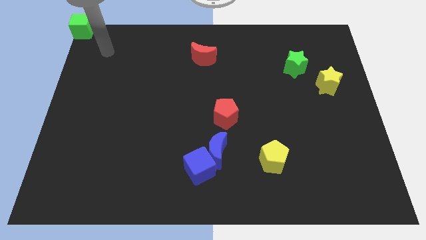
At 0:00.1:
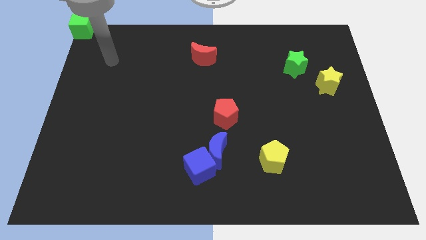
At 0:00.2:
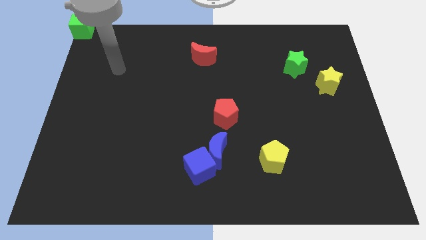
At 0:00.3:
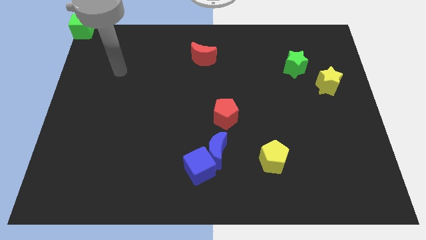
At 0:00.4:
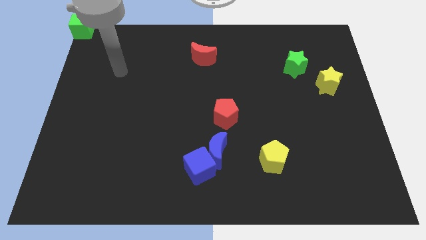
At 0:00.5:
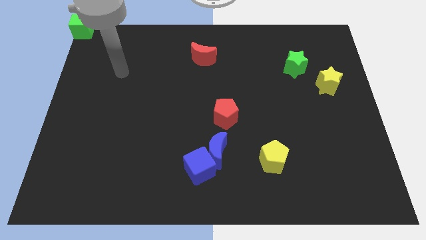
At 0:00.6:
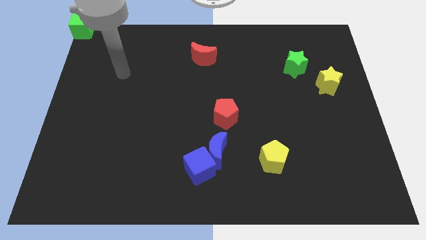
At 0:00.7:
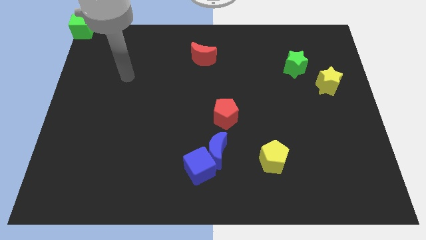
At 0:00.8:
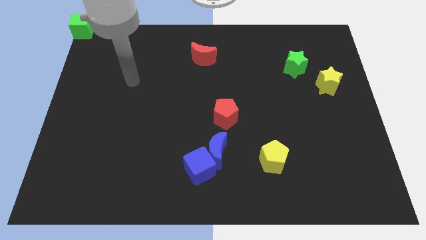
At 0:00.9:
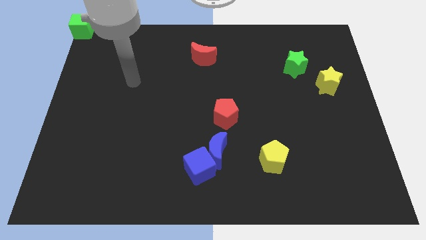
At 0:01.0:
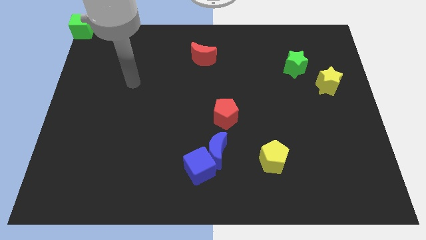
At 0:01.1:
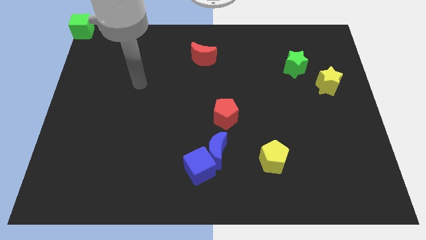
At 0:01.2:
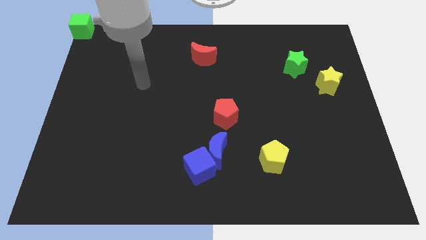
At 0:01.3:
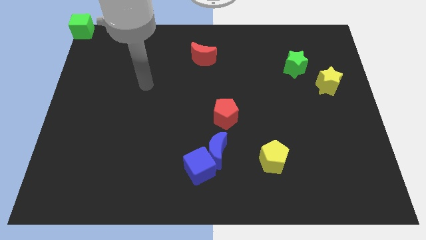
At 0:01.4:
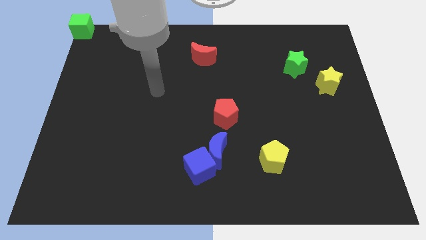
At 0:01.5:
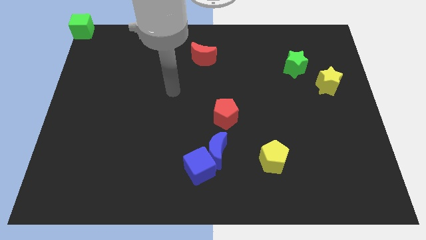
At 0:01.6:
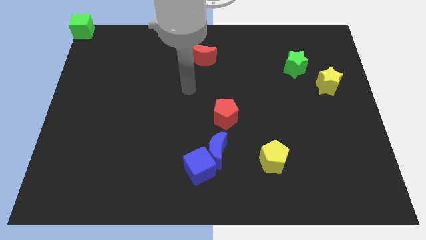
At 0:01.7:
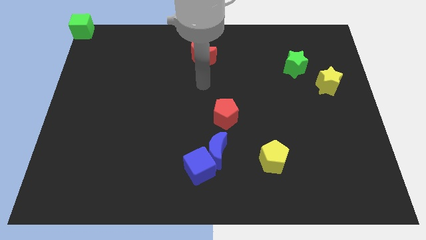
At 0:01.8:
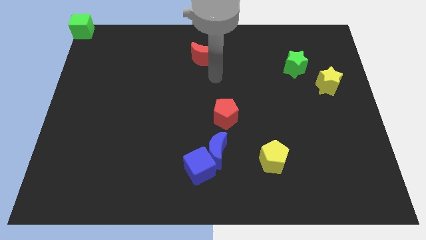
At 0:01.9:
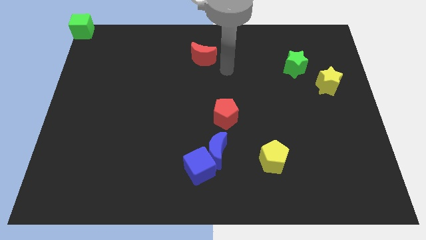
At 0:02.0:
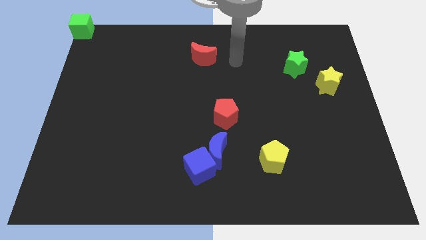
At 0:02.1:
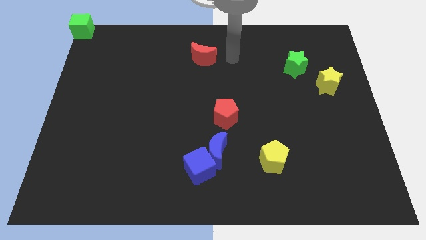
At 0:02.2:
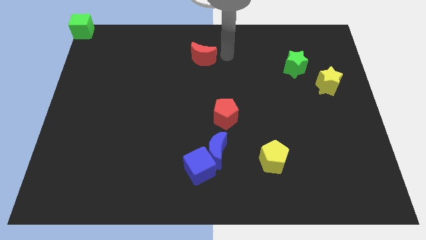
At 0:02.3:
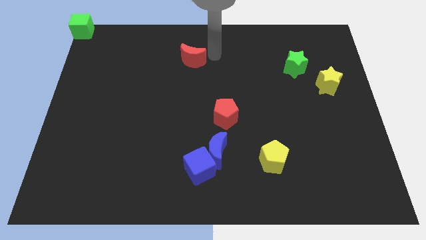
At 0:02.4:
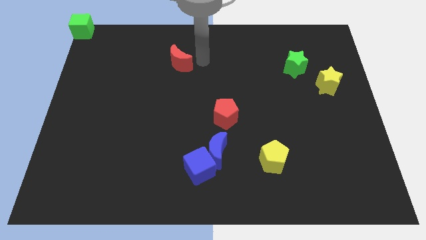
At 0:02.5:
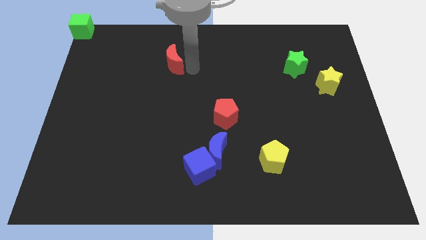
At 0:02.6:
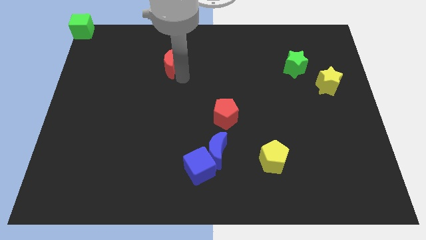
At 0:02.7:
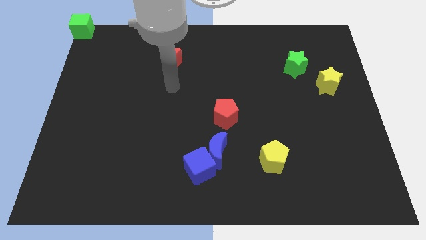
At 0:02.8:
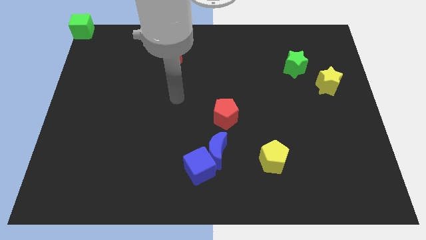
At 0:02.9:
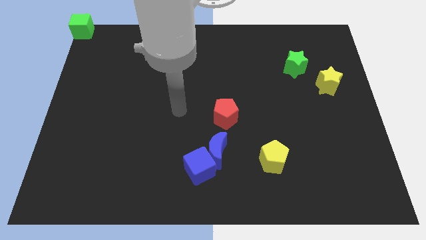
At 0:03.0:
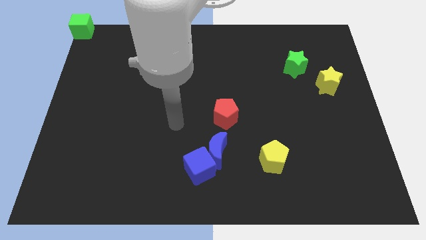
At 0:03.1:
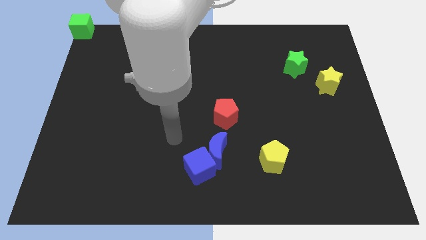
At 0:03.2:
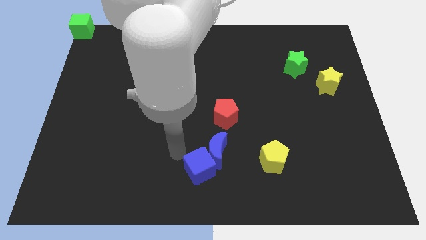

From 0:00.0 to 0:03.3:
drag the red moon diagonally top left to the blue cube

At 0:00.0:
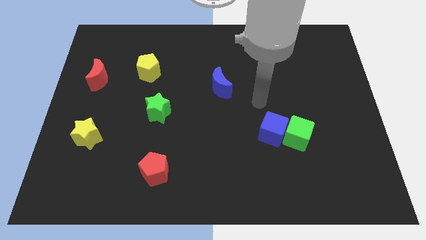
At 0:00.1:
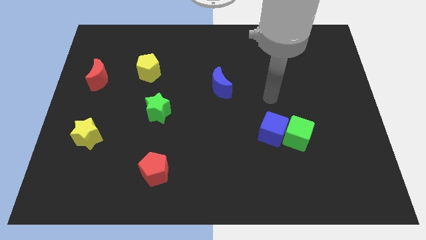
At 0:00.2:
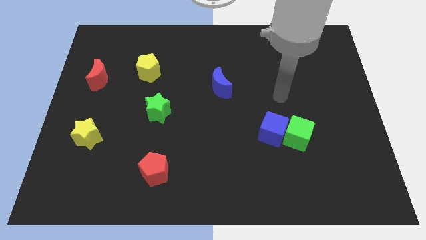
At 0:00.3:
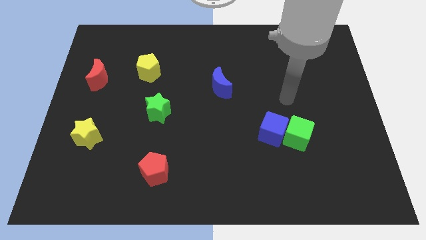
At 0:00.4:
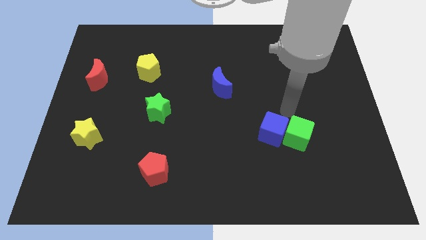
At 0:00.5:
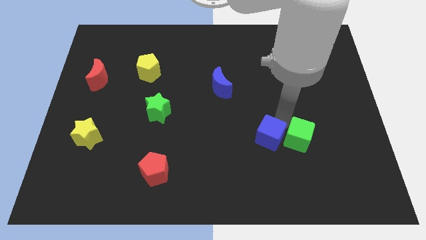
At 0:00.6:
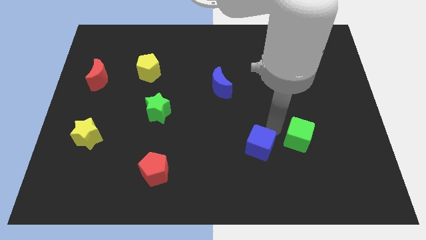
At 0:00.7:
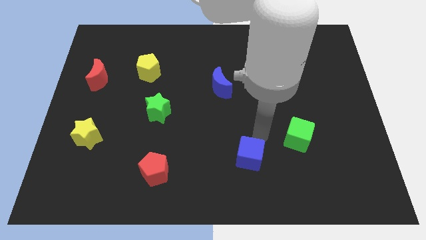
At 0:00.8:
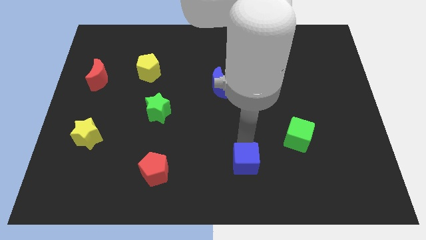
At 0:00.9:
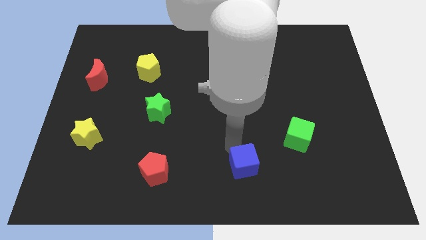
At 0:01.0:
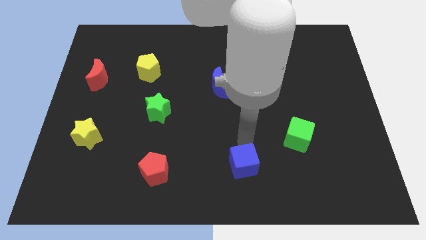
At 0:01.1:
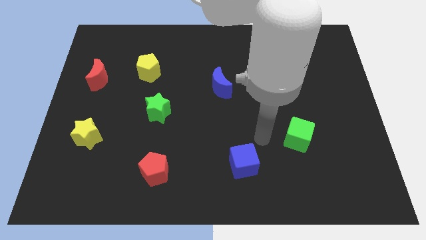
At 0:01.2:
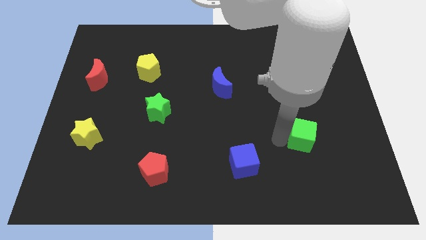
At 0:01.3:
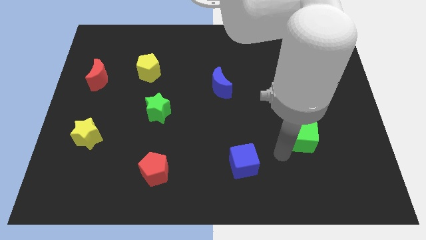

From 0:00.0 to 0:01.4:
separate the blue cube from the green cube

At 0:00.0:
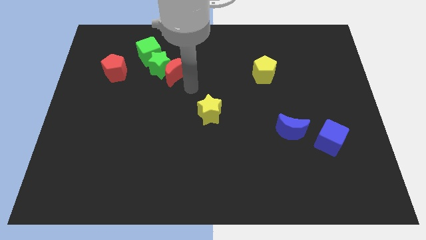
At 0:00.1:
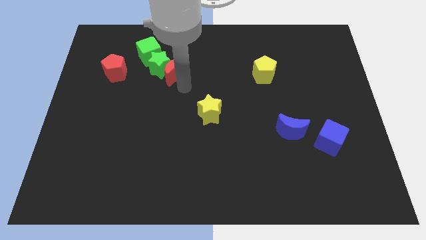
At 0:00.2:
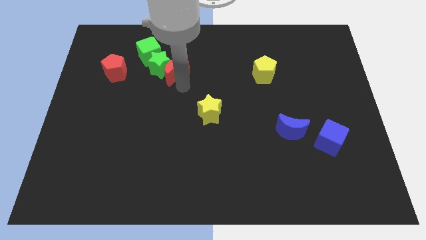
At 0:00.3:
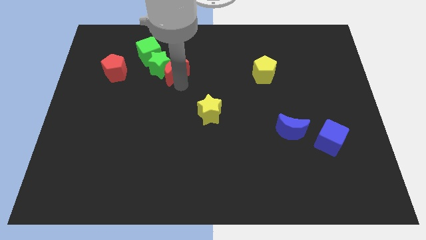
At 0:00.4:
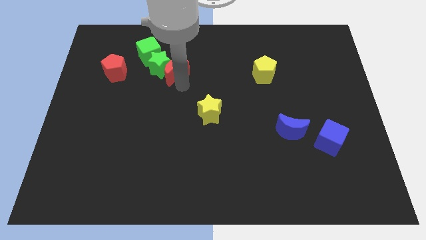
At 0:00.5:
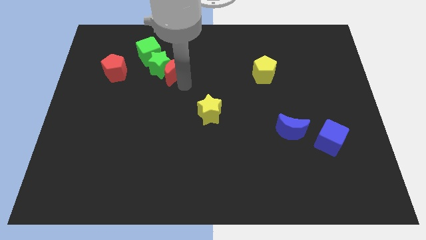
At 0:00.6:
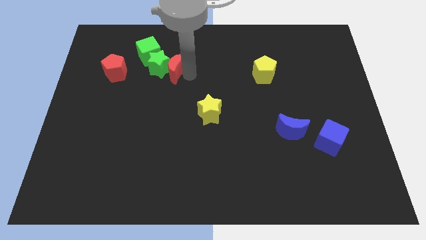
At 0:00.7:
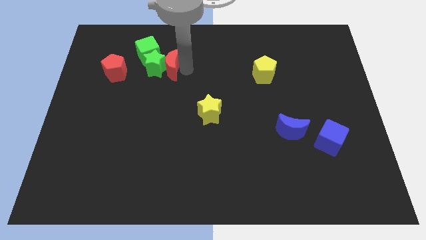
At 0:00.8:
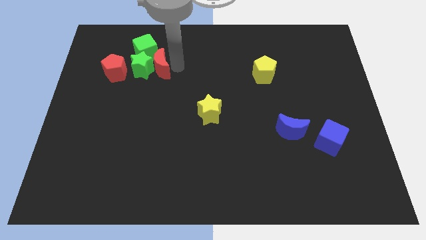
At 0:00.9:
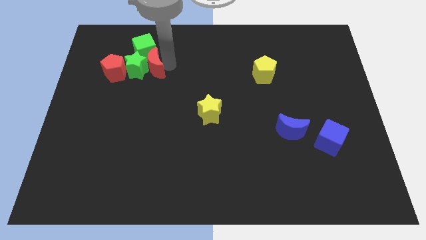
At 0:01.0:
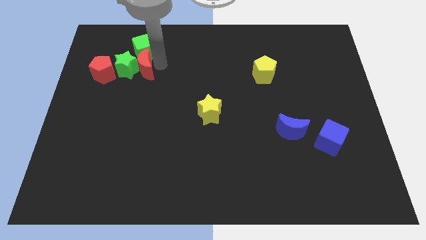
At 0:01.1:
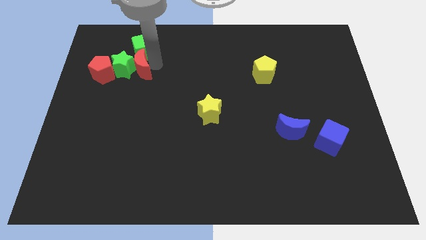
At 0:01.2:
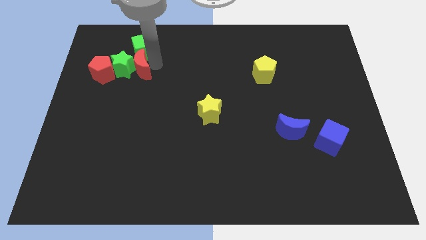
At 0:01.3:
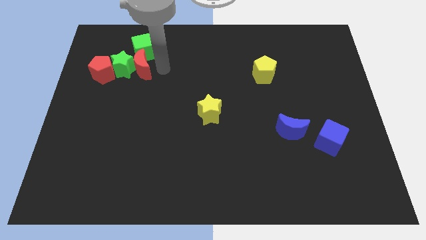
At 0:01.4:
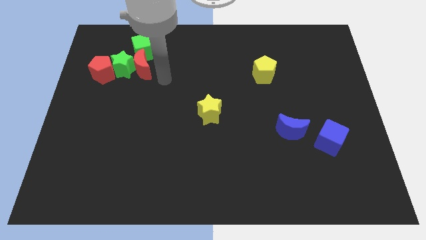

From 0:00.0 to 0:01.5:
push red moon in green star

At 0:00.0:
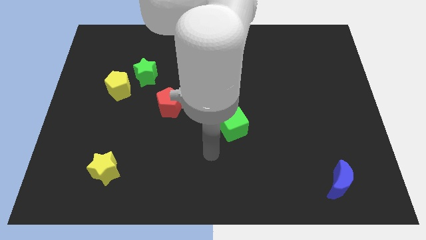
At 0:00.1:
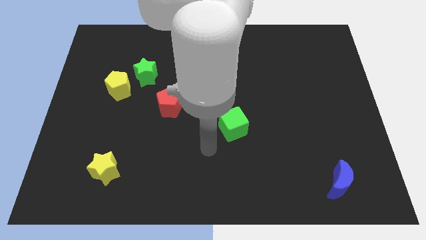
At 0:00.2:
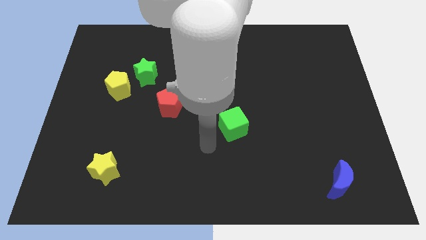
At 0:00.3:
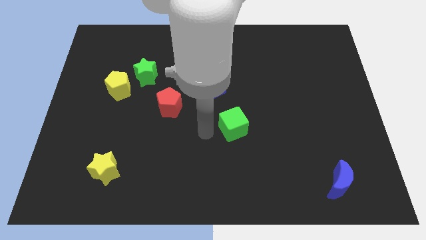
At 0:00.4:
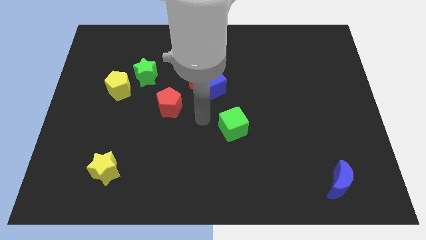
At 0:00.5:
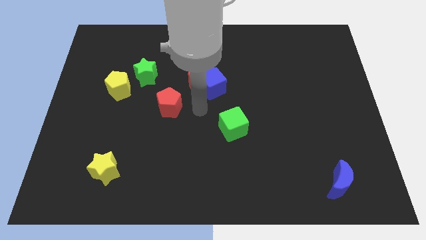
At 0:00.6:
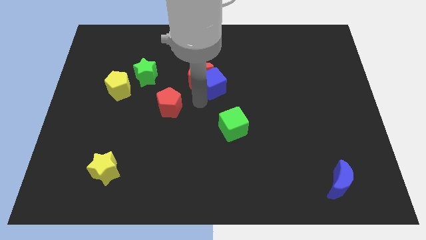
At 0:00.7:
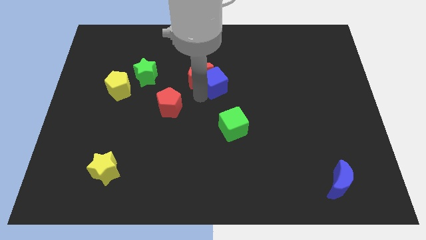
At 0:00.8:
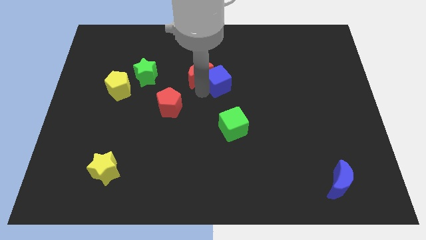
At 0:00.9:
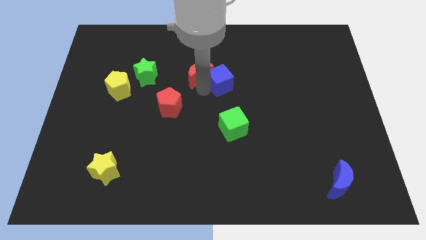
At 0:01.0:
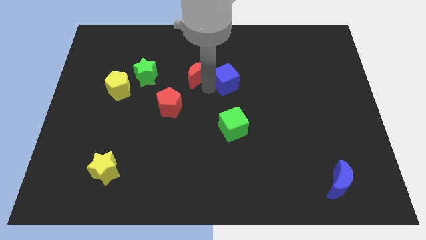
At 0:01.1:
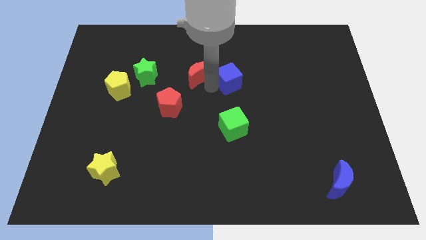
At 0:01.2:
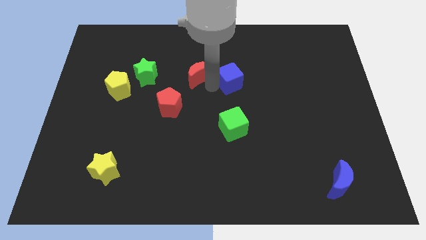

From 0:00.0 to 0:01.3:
push the blue cube slightly to the right

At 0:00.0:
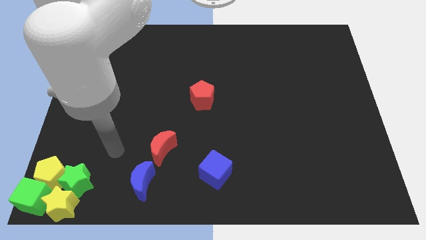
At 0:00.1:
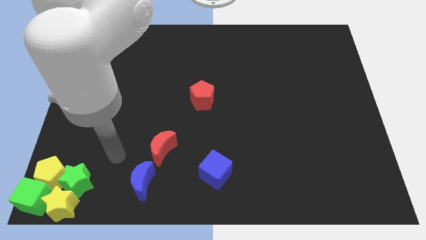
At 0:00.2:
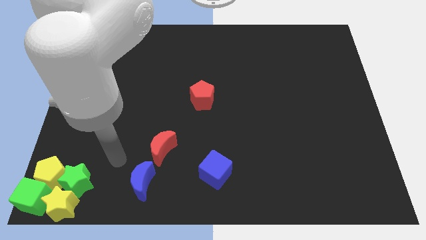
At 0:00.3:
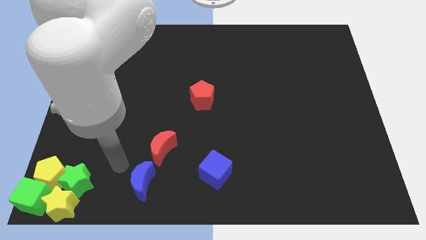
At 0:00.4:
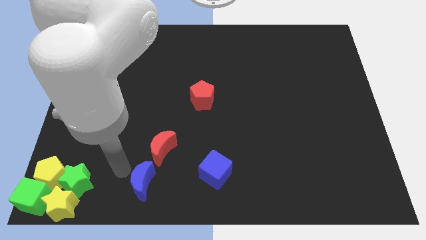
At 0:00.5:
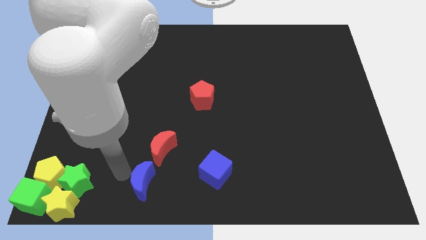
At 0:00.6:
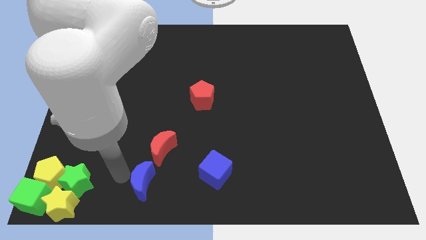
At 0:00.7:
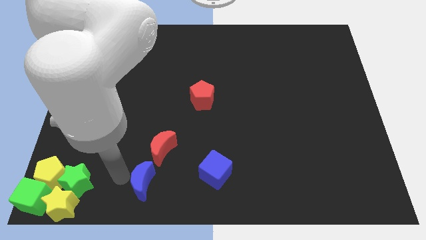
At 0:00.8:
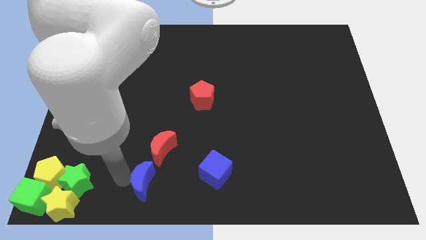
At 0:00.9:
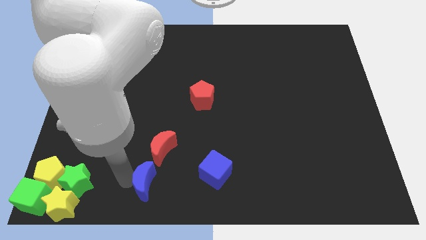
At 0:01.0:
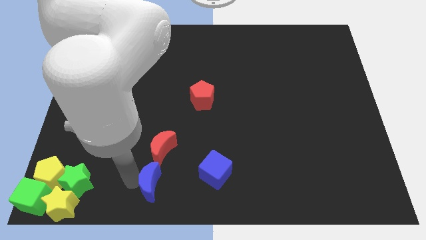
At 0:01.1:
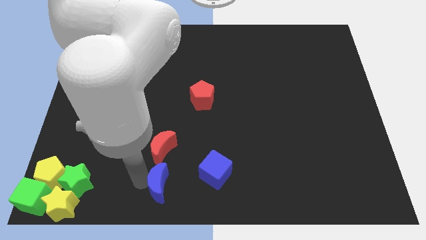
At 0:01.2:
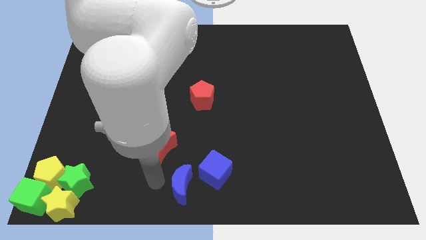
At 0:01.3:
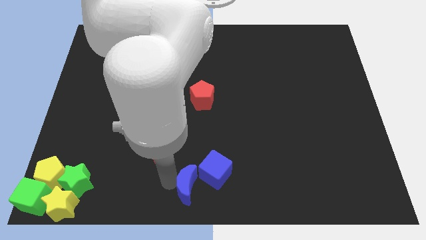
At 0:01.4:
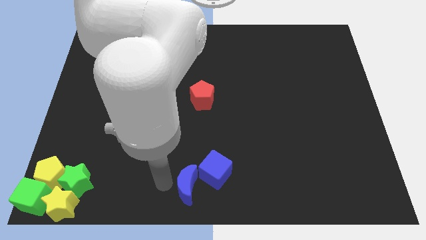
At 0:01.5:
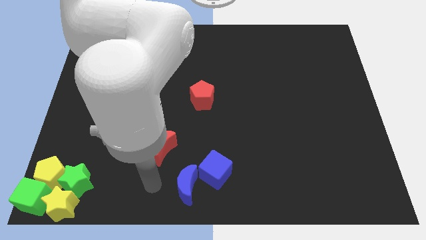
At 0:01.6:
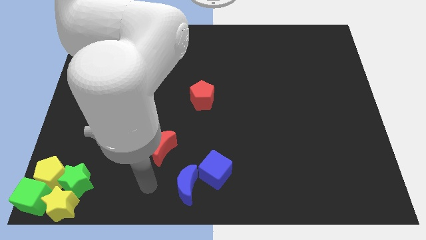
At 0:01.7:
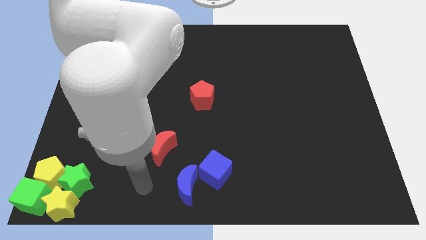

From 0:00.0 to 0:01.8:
slide the blue crescent into the left side of the blue cube
